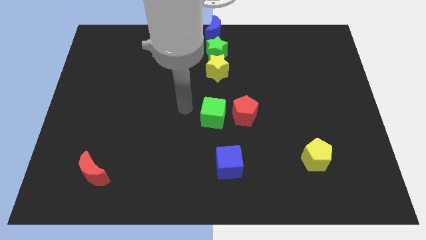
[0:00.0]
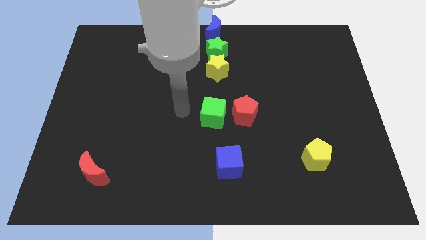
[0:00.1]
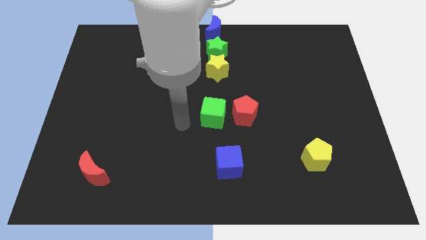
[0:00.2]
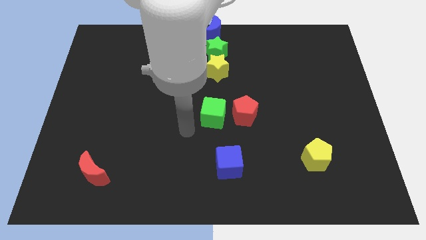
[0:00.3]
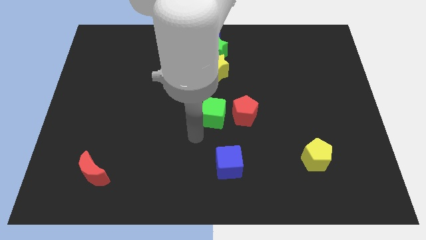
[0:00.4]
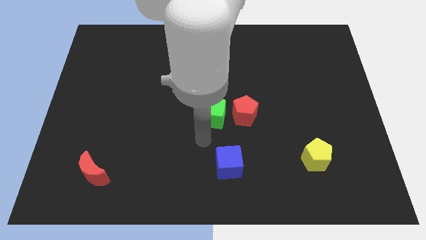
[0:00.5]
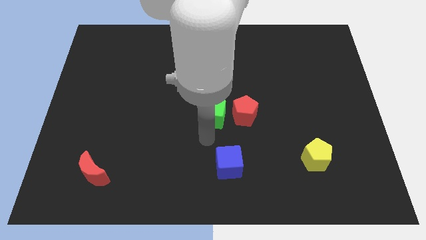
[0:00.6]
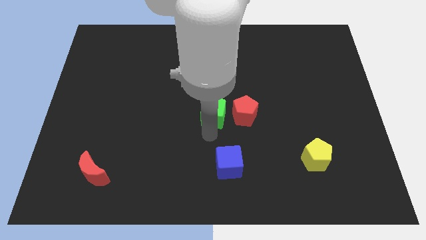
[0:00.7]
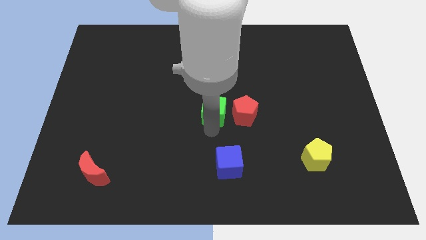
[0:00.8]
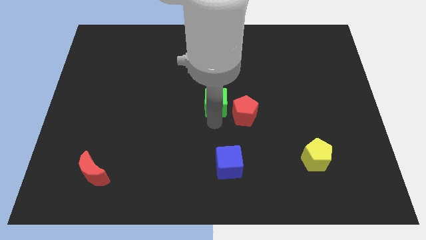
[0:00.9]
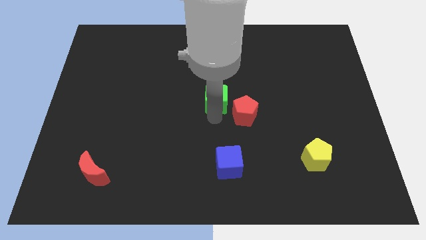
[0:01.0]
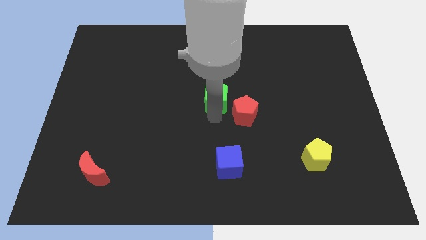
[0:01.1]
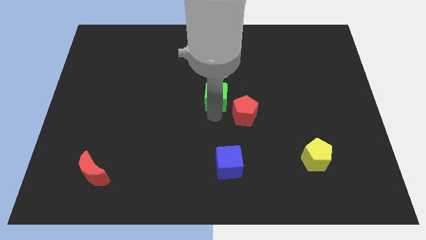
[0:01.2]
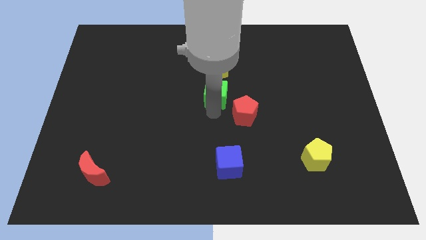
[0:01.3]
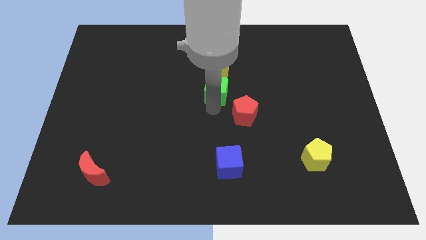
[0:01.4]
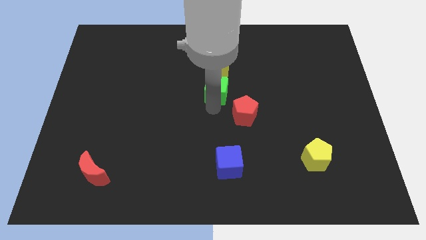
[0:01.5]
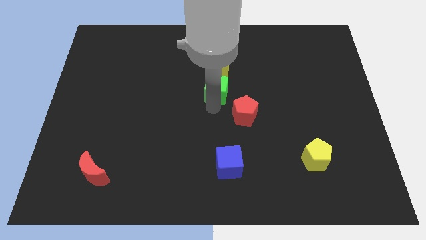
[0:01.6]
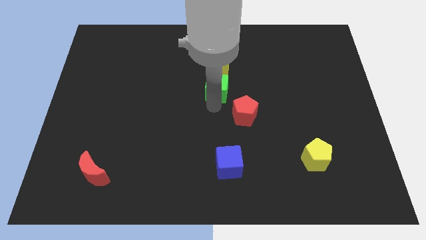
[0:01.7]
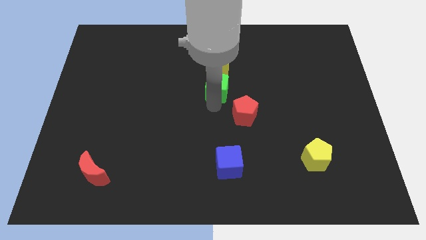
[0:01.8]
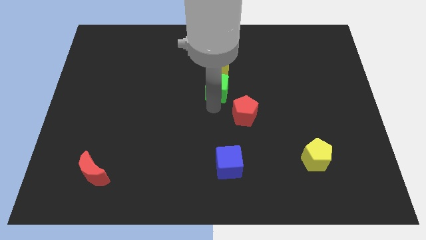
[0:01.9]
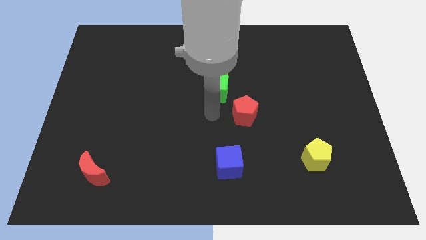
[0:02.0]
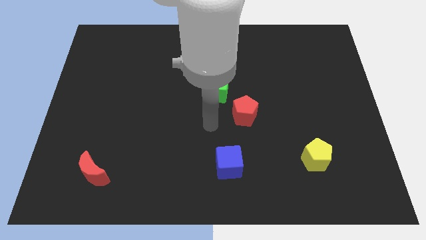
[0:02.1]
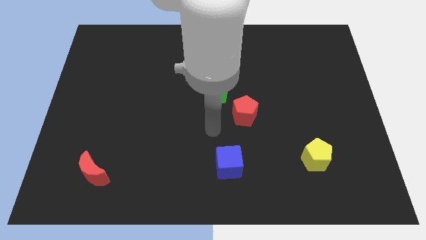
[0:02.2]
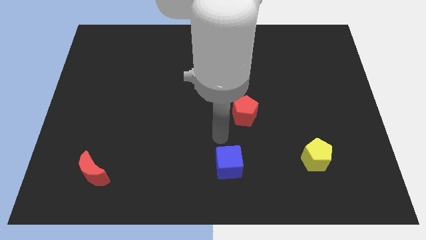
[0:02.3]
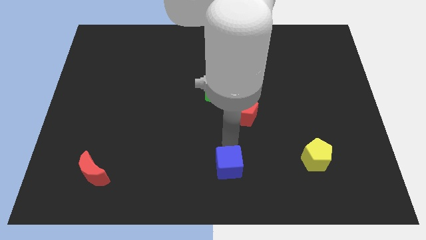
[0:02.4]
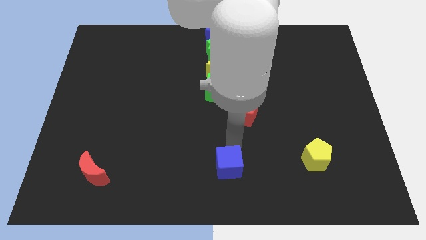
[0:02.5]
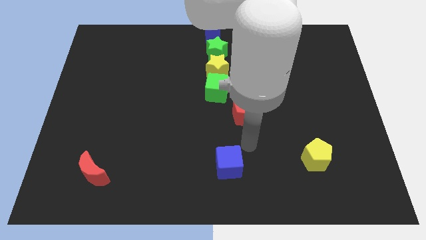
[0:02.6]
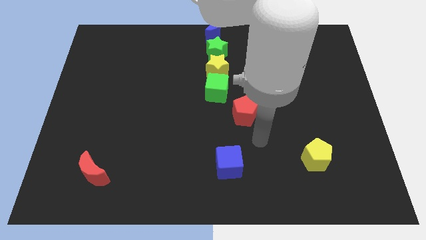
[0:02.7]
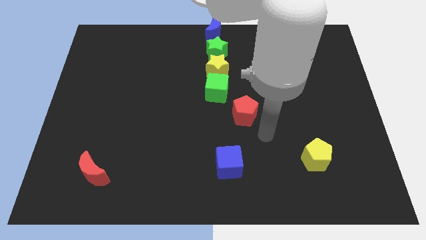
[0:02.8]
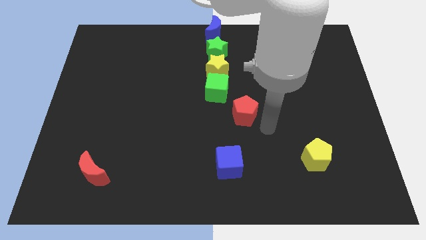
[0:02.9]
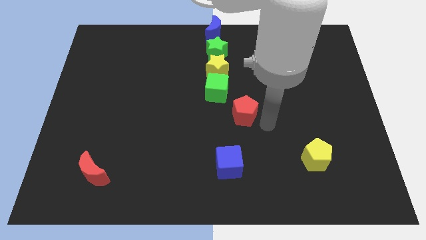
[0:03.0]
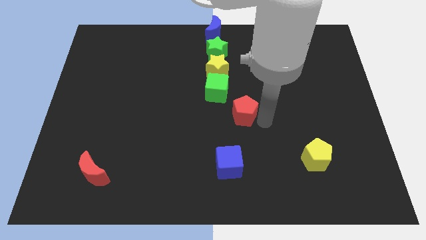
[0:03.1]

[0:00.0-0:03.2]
push the green cube below the yellow star

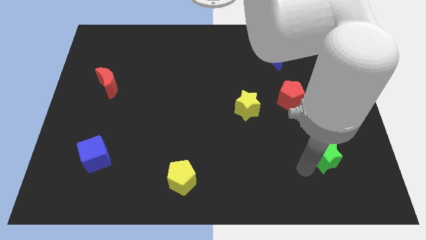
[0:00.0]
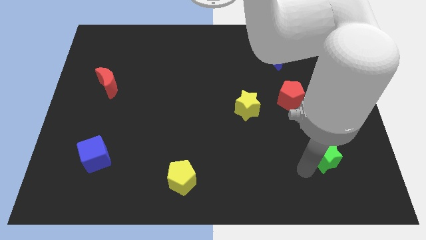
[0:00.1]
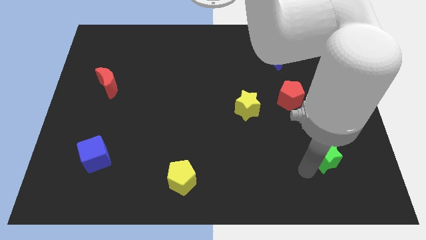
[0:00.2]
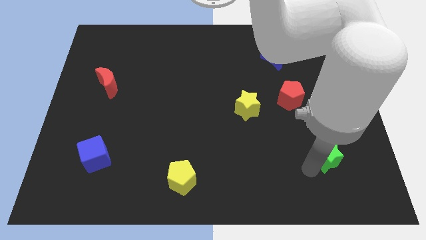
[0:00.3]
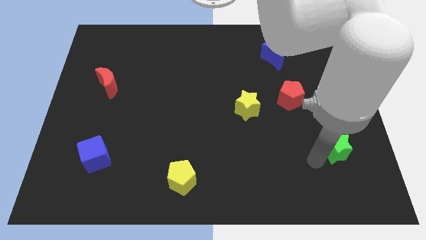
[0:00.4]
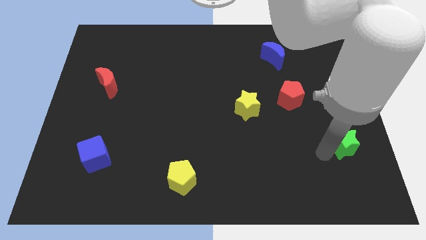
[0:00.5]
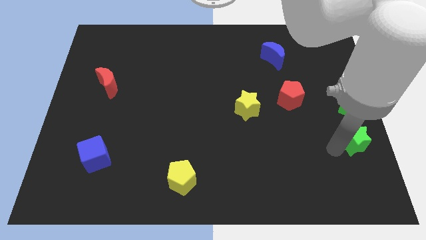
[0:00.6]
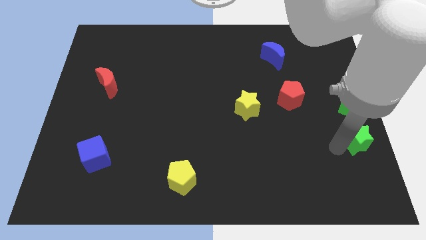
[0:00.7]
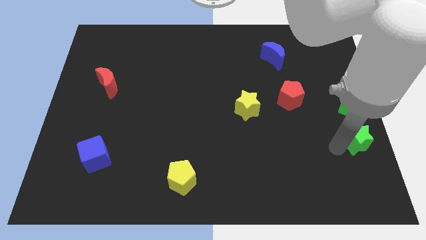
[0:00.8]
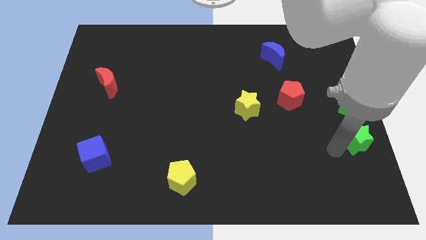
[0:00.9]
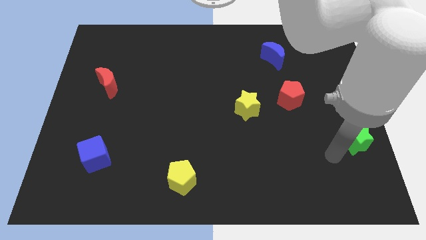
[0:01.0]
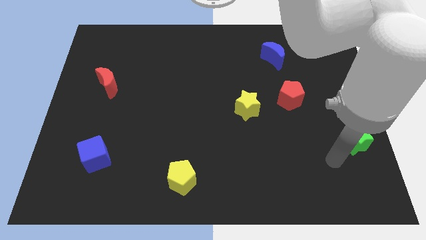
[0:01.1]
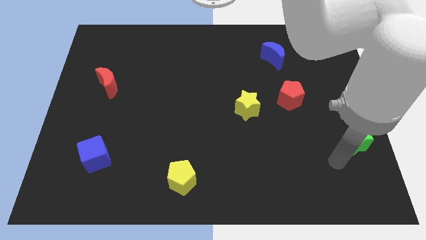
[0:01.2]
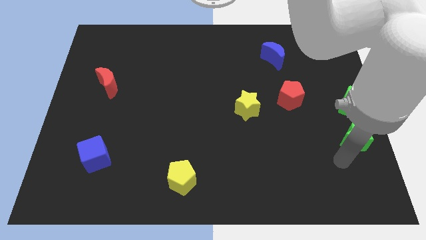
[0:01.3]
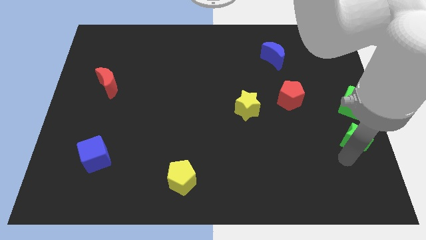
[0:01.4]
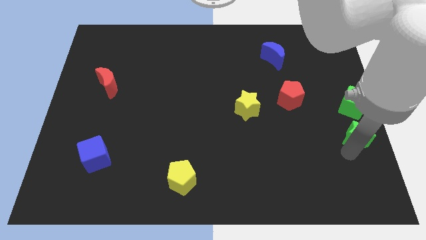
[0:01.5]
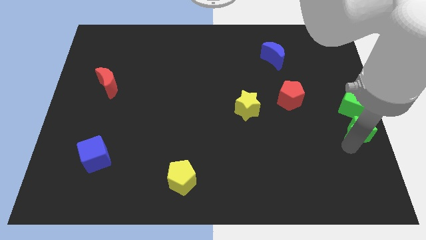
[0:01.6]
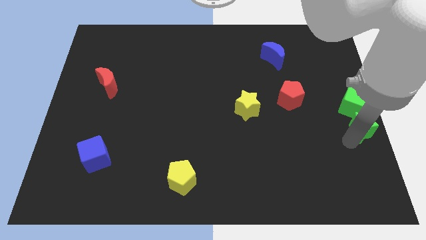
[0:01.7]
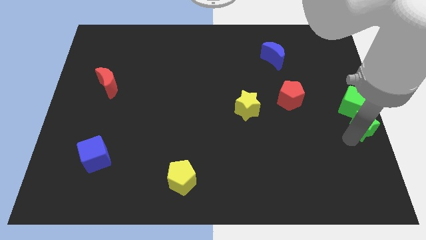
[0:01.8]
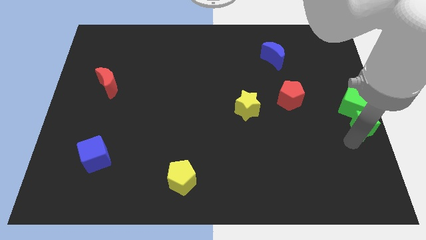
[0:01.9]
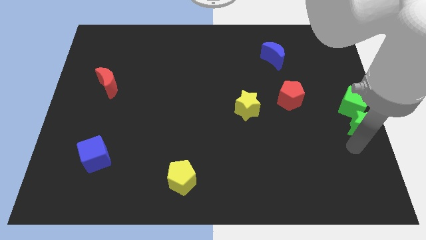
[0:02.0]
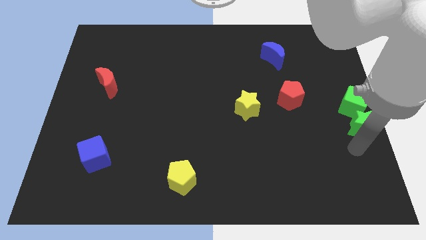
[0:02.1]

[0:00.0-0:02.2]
place the green star below the green cube

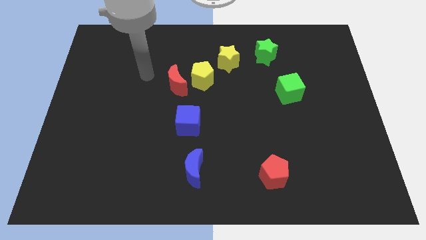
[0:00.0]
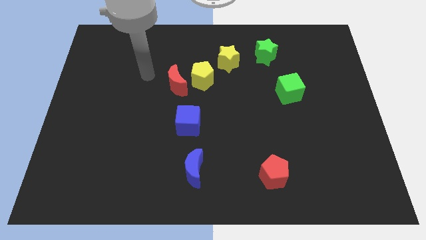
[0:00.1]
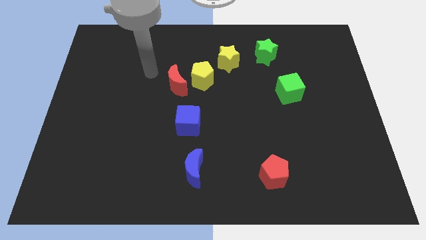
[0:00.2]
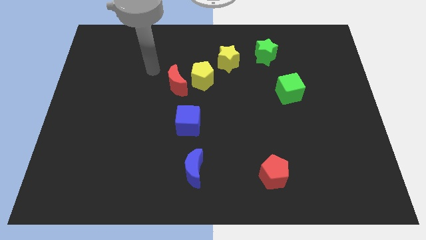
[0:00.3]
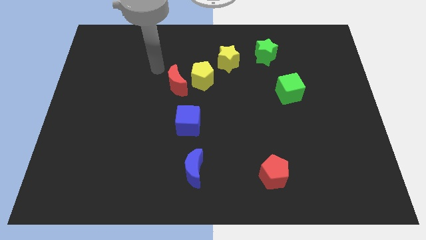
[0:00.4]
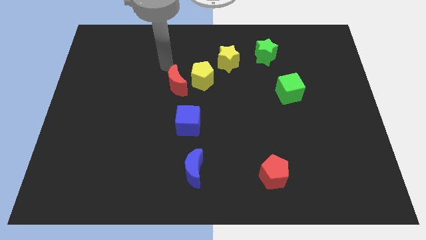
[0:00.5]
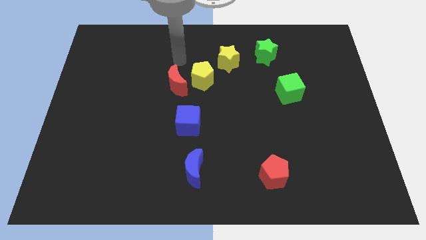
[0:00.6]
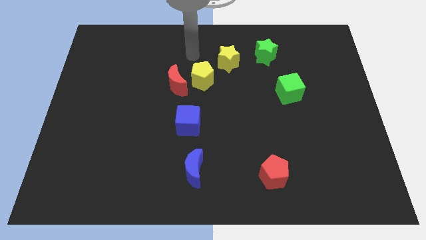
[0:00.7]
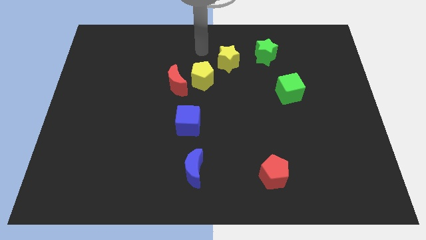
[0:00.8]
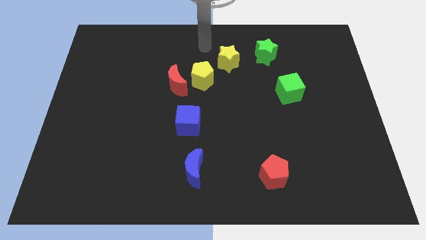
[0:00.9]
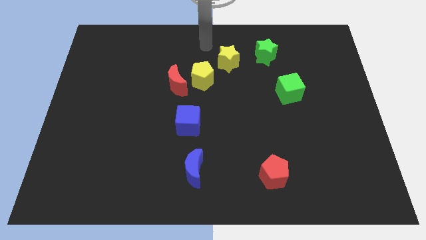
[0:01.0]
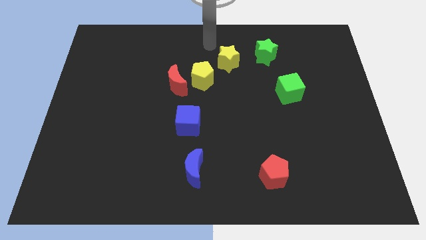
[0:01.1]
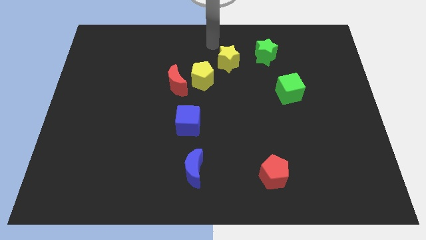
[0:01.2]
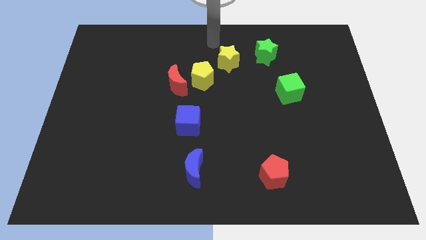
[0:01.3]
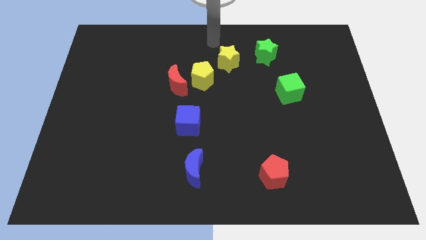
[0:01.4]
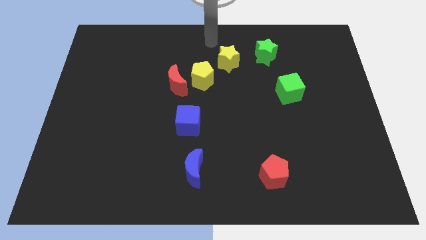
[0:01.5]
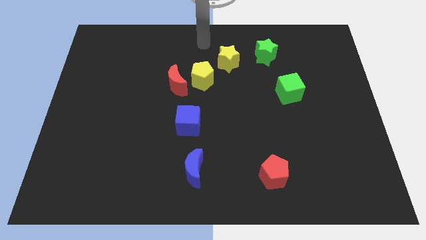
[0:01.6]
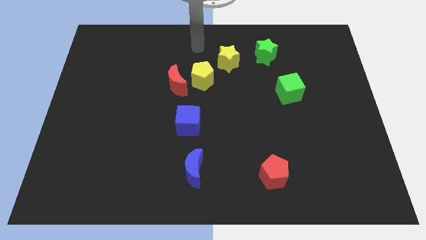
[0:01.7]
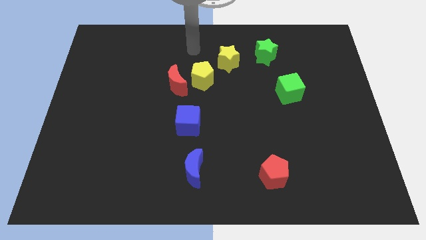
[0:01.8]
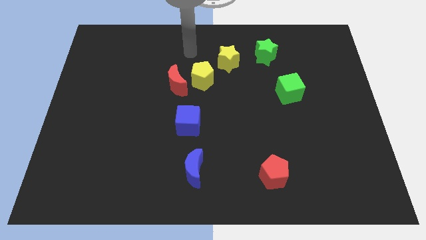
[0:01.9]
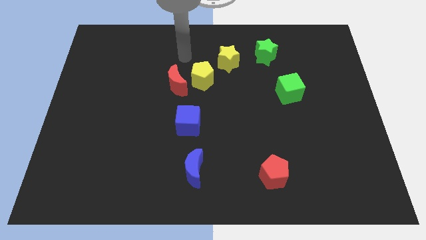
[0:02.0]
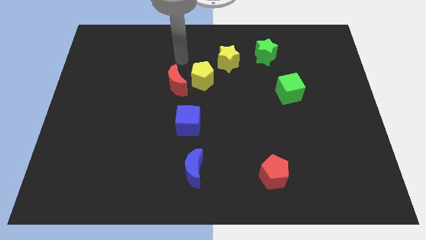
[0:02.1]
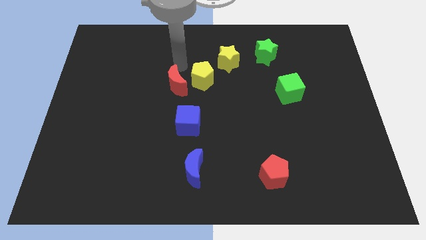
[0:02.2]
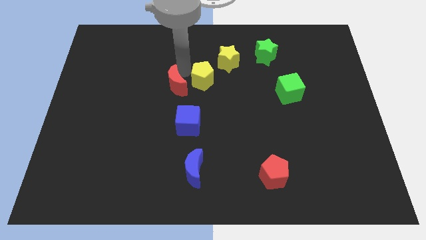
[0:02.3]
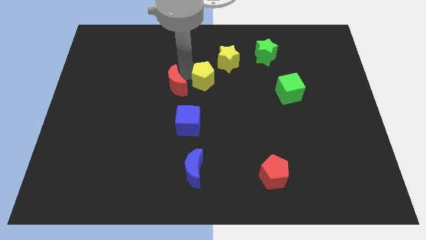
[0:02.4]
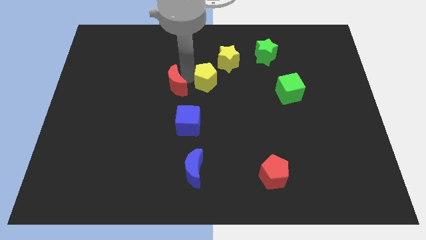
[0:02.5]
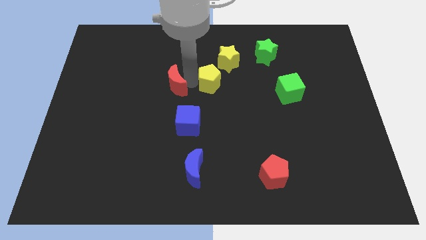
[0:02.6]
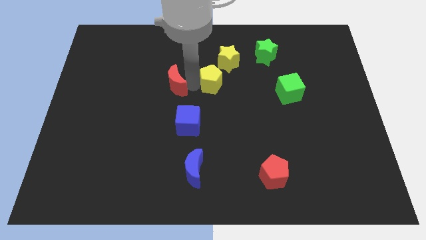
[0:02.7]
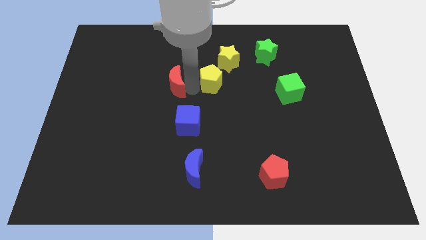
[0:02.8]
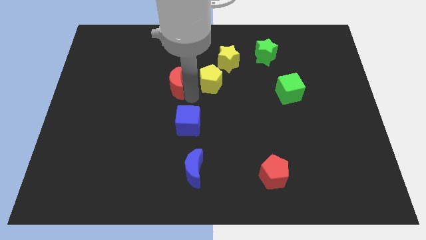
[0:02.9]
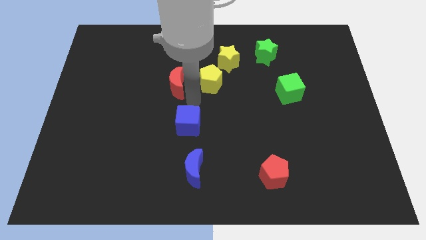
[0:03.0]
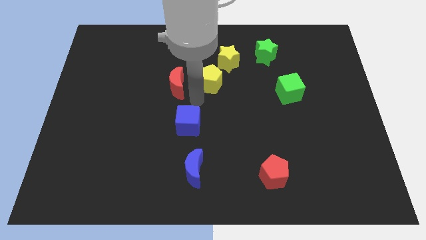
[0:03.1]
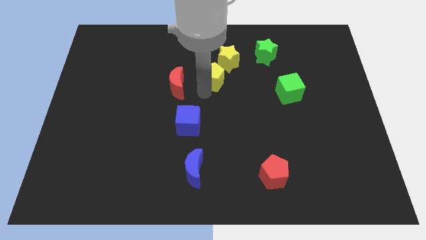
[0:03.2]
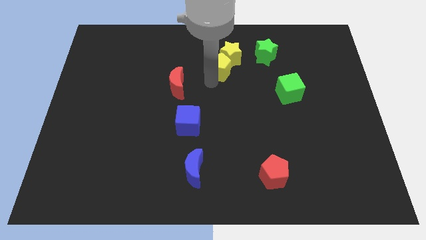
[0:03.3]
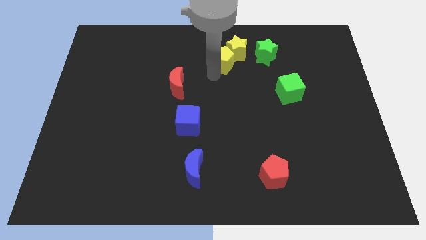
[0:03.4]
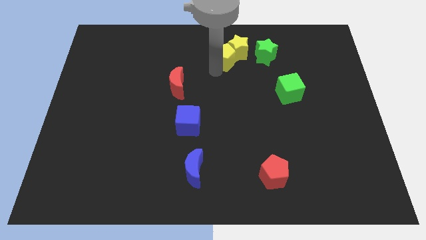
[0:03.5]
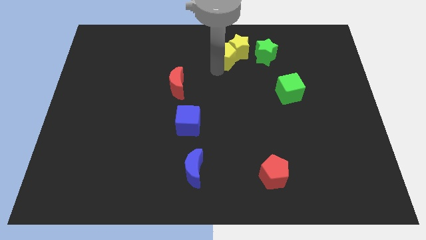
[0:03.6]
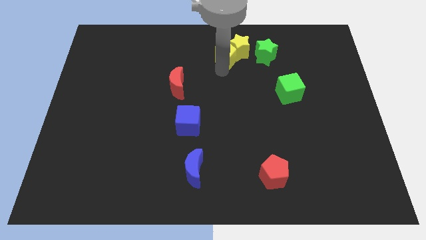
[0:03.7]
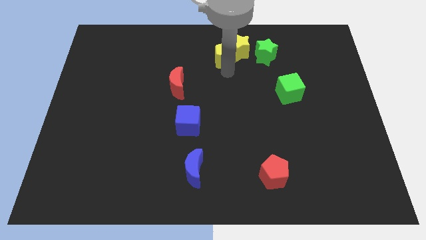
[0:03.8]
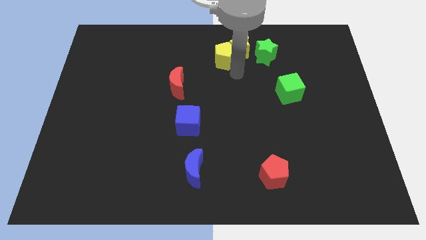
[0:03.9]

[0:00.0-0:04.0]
push the yellow star with the yellow pentagon
